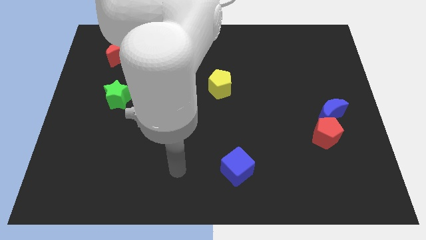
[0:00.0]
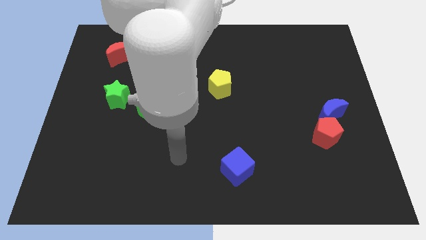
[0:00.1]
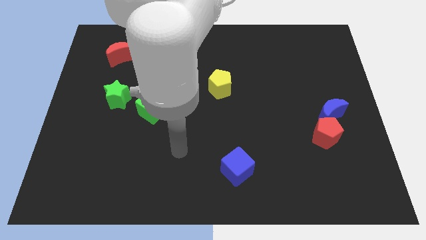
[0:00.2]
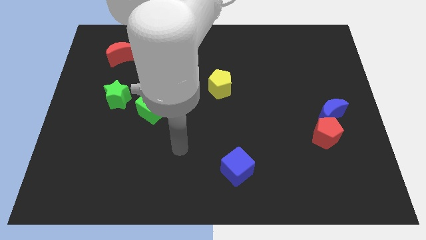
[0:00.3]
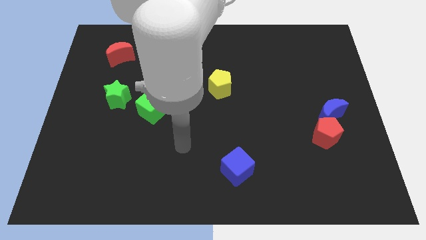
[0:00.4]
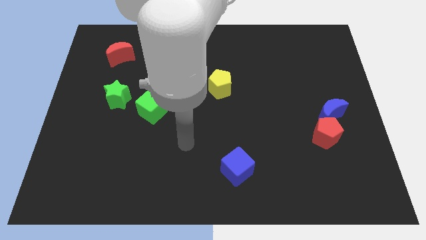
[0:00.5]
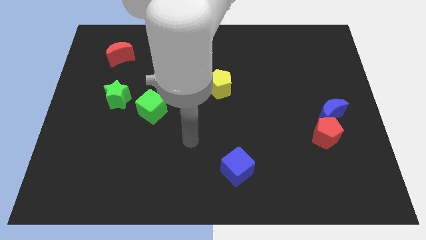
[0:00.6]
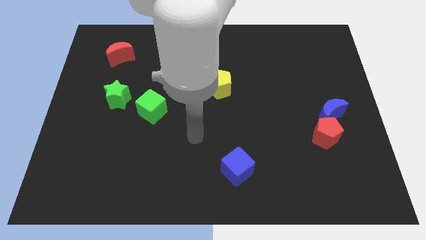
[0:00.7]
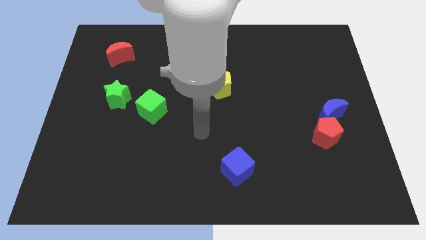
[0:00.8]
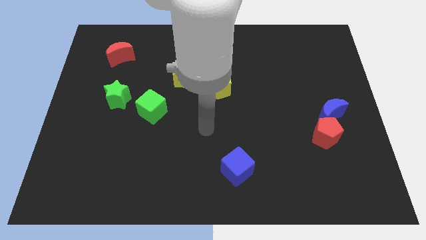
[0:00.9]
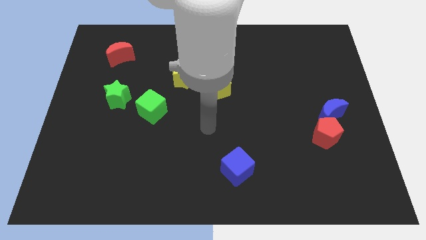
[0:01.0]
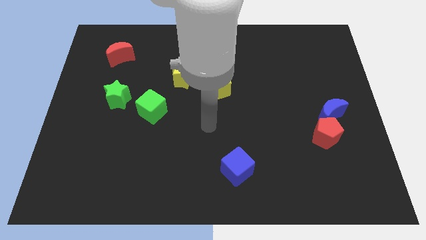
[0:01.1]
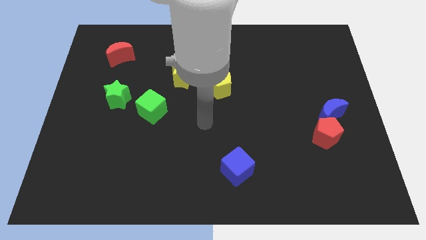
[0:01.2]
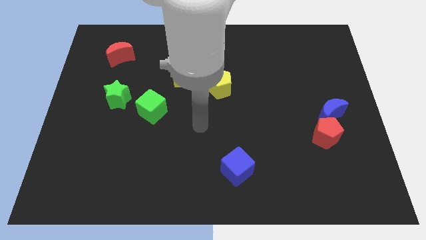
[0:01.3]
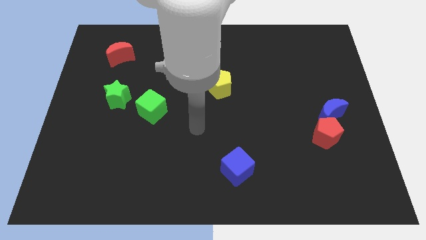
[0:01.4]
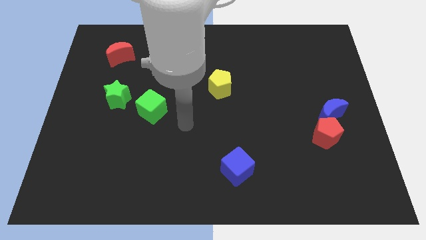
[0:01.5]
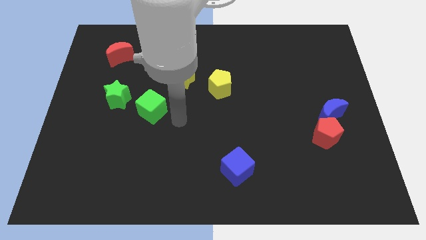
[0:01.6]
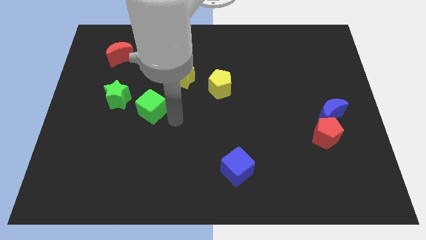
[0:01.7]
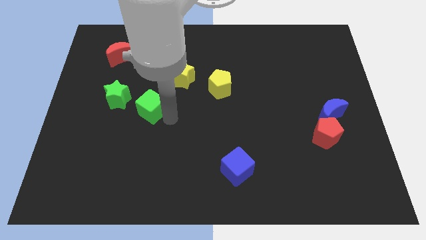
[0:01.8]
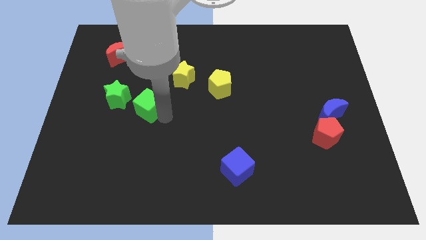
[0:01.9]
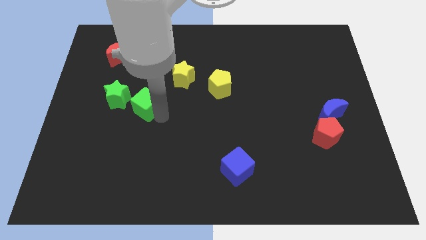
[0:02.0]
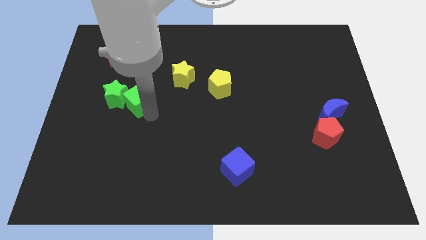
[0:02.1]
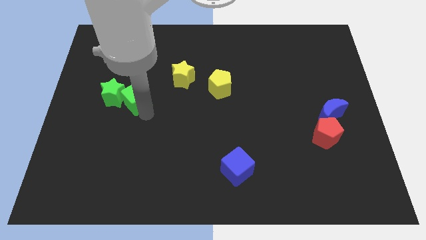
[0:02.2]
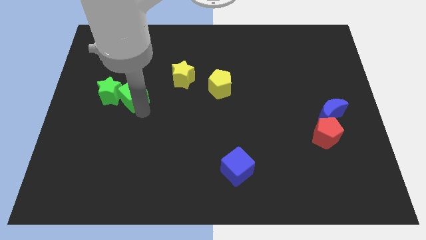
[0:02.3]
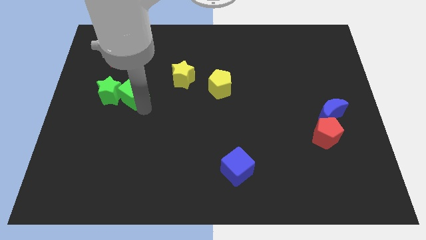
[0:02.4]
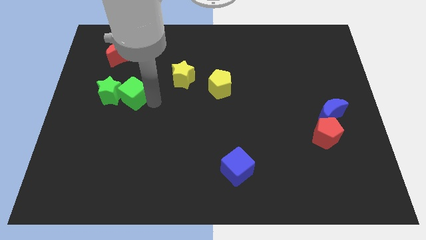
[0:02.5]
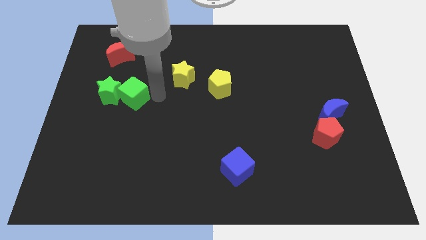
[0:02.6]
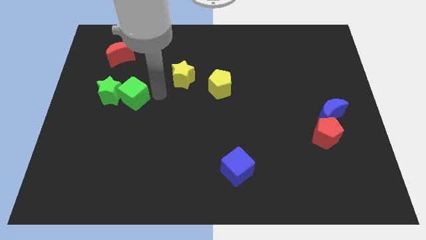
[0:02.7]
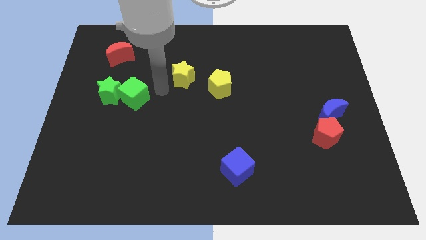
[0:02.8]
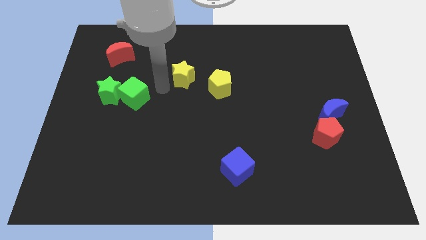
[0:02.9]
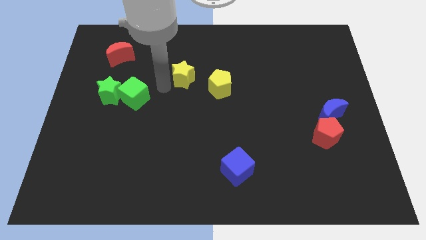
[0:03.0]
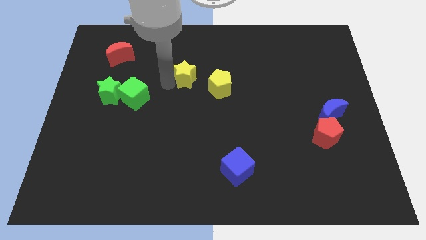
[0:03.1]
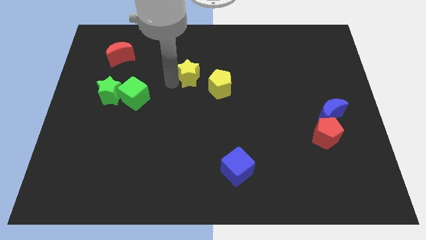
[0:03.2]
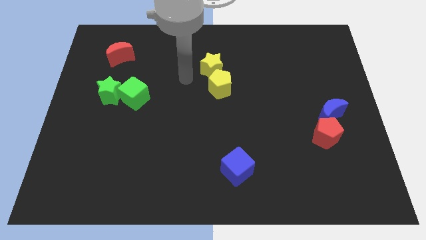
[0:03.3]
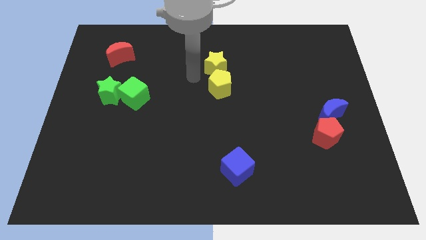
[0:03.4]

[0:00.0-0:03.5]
push the green cube into the green star

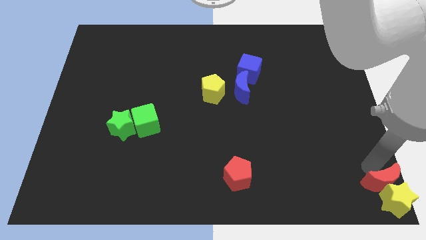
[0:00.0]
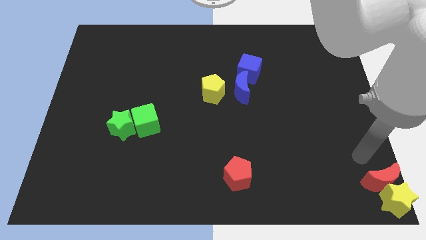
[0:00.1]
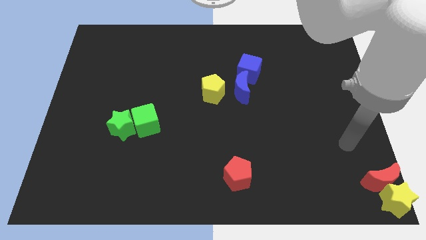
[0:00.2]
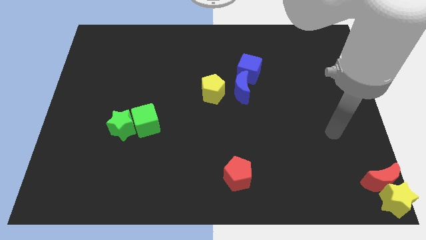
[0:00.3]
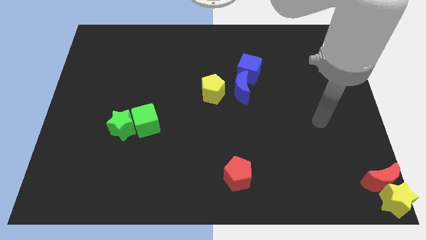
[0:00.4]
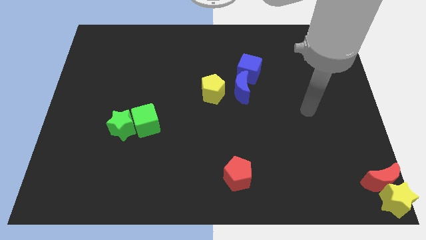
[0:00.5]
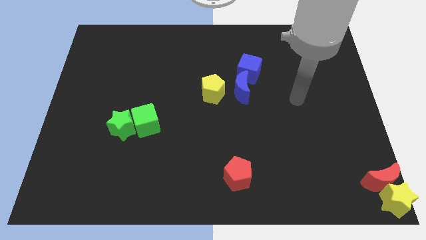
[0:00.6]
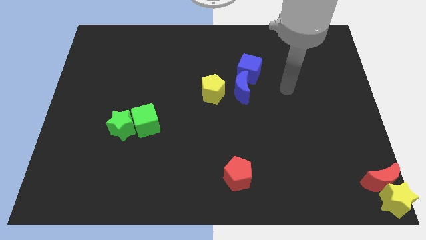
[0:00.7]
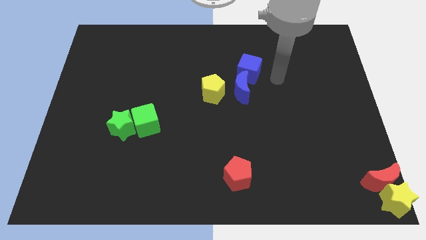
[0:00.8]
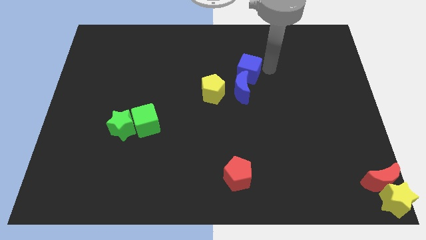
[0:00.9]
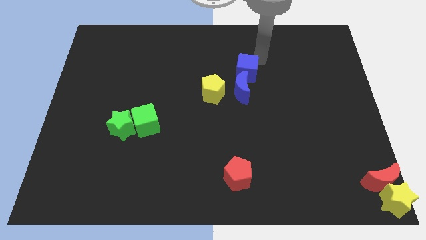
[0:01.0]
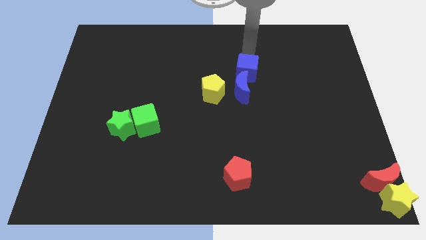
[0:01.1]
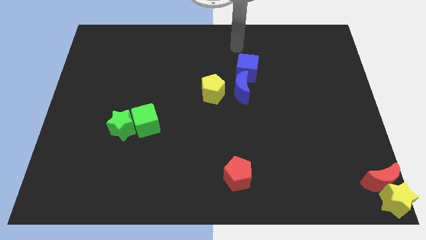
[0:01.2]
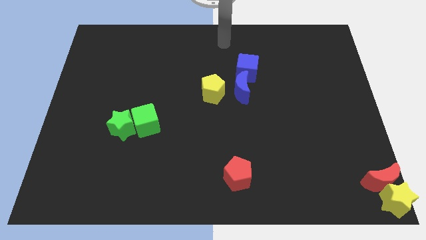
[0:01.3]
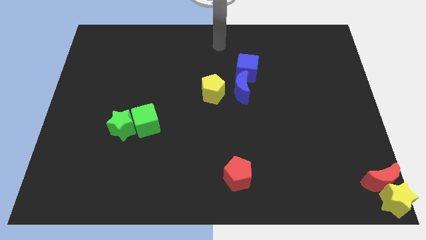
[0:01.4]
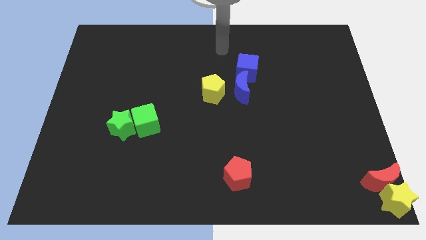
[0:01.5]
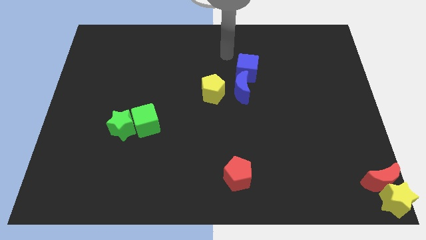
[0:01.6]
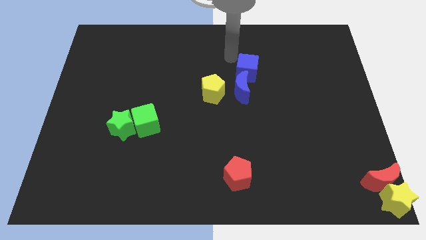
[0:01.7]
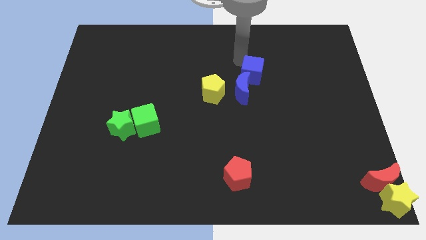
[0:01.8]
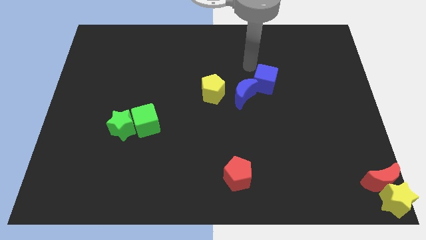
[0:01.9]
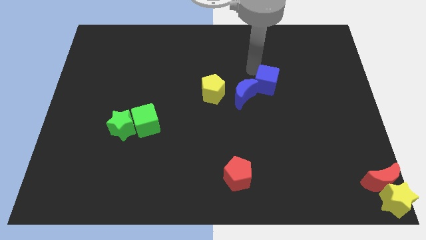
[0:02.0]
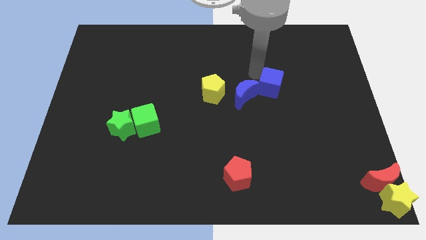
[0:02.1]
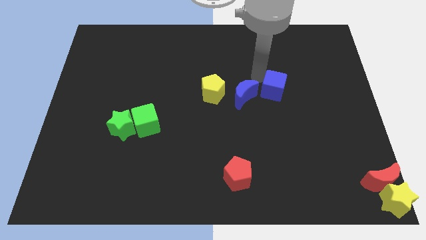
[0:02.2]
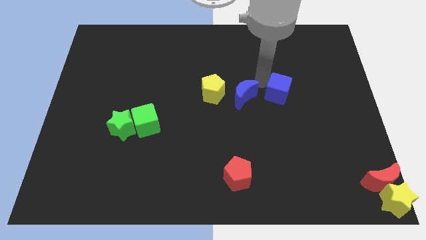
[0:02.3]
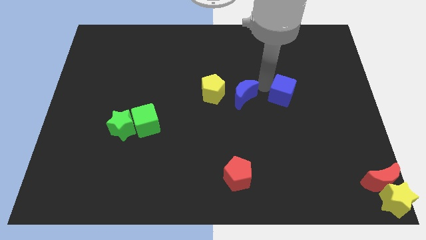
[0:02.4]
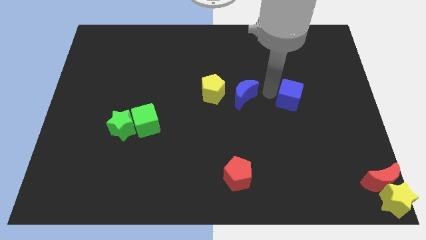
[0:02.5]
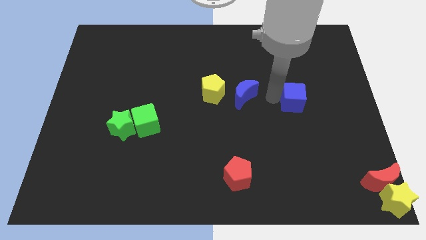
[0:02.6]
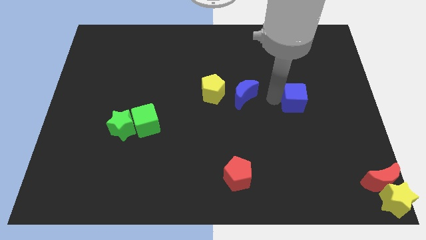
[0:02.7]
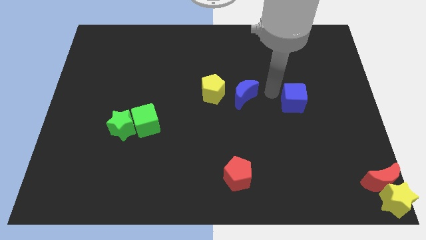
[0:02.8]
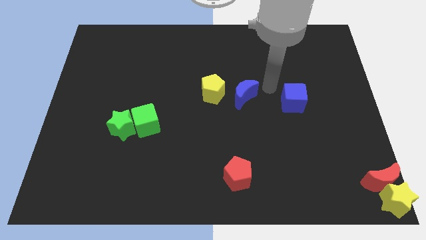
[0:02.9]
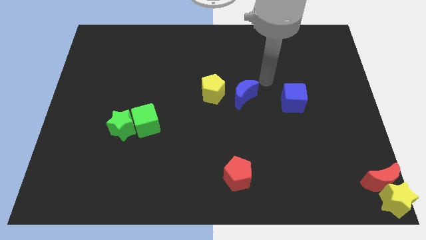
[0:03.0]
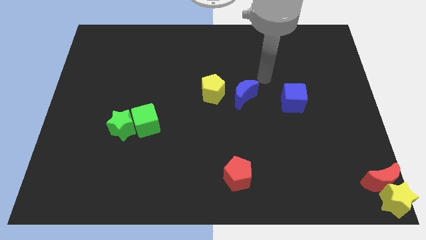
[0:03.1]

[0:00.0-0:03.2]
push the blue cube towards downward

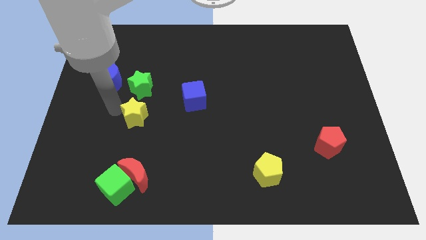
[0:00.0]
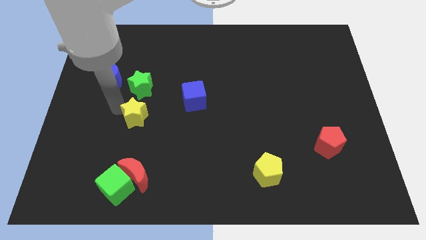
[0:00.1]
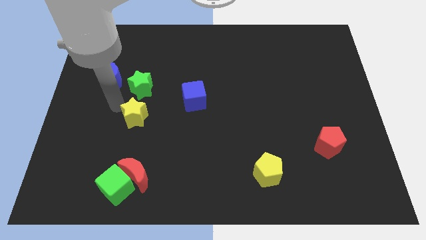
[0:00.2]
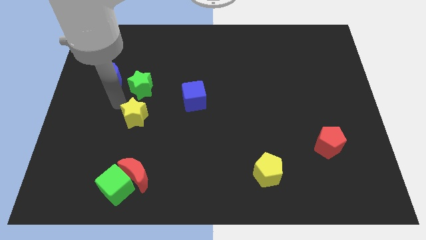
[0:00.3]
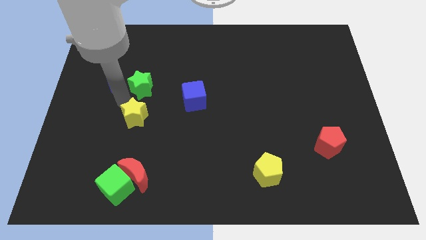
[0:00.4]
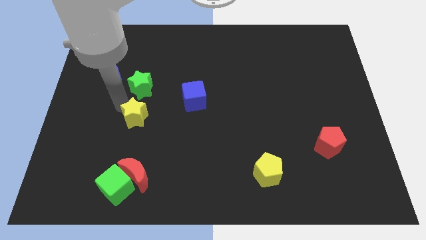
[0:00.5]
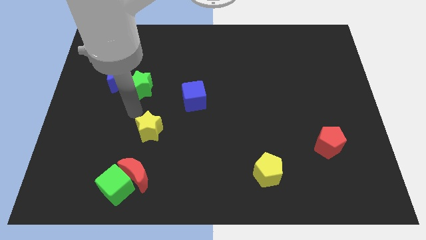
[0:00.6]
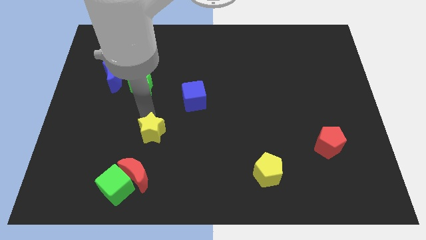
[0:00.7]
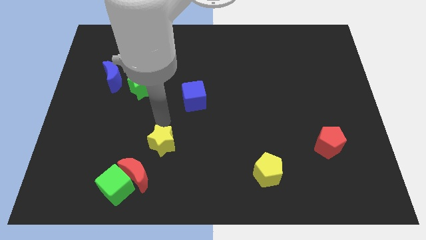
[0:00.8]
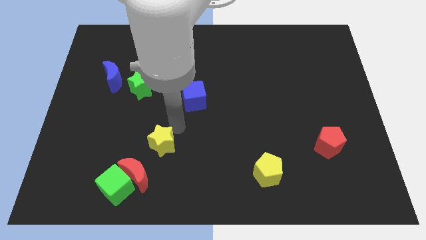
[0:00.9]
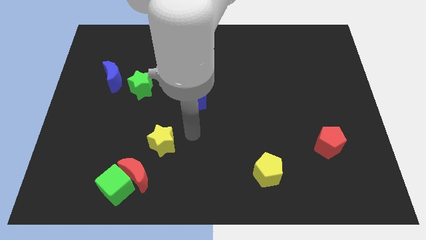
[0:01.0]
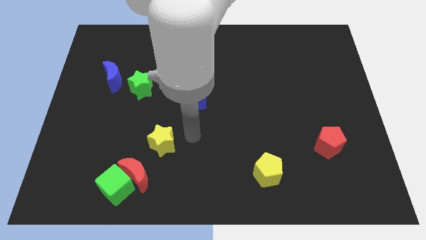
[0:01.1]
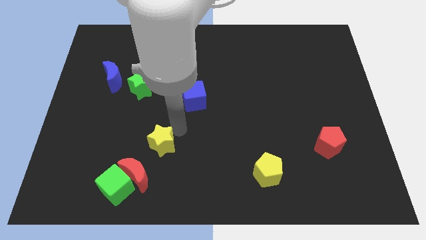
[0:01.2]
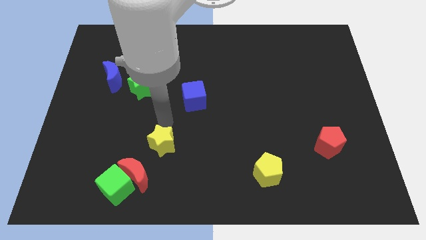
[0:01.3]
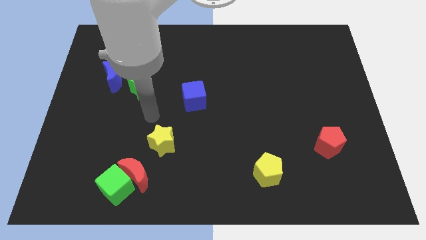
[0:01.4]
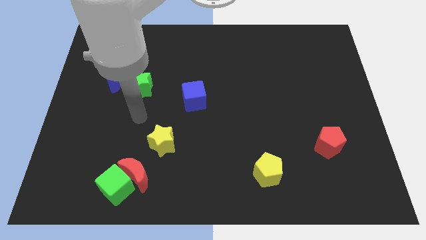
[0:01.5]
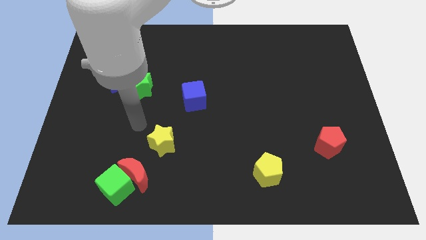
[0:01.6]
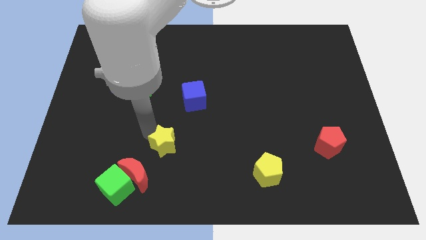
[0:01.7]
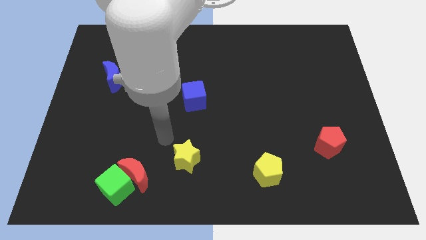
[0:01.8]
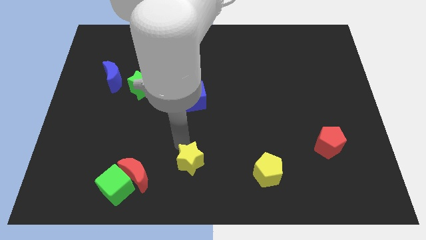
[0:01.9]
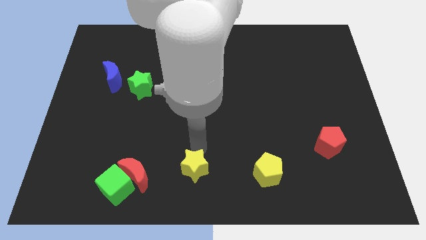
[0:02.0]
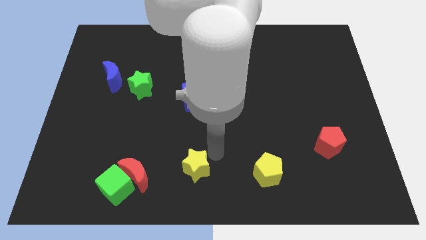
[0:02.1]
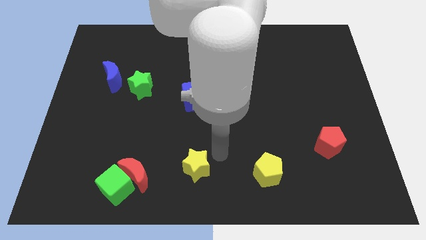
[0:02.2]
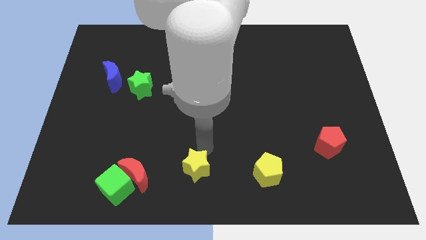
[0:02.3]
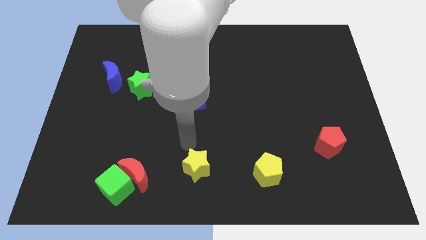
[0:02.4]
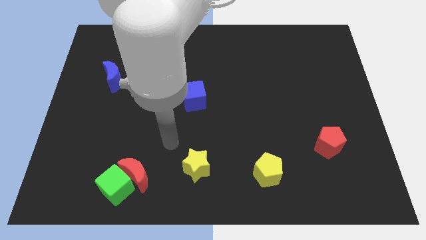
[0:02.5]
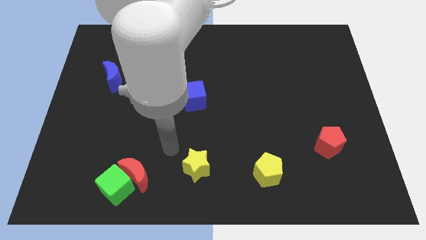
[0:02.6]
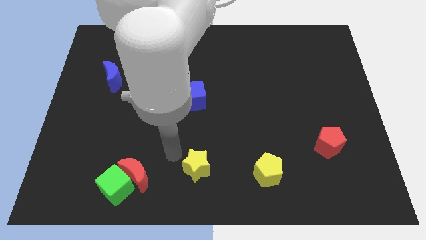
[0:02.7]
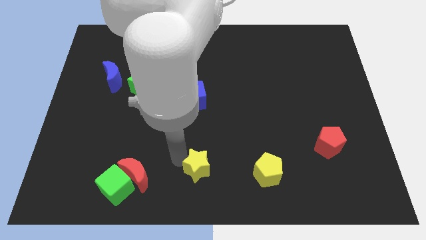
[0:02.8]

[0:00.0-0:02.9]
push yellow star below blue cube
